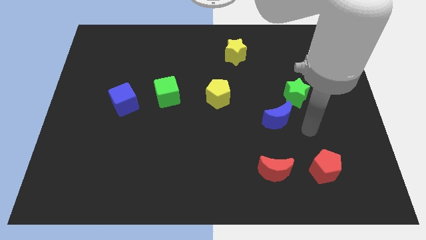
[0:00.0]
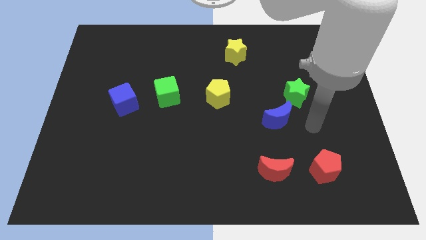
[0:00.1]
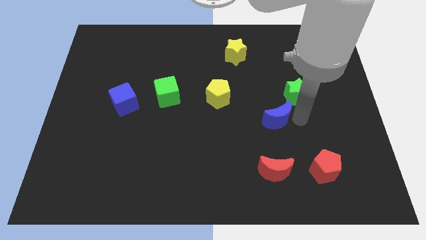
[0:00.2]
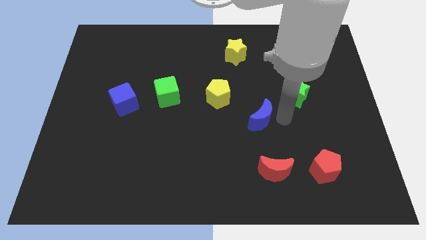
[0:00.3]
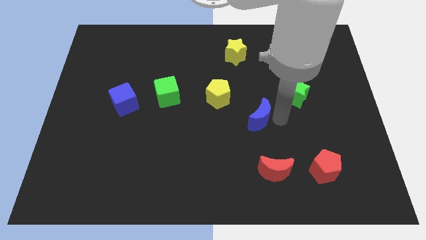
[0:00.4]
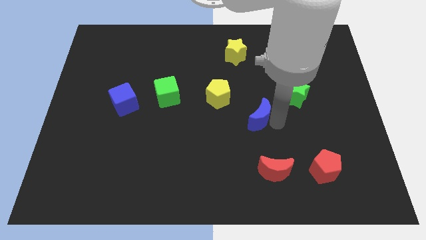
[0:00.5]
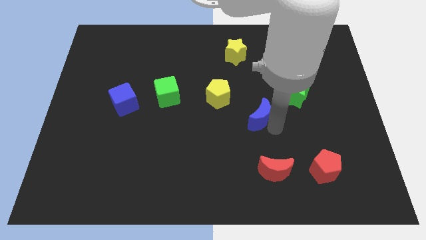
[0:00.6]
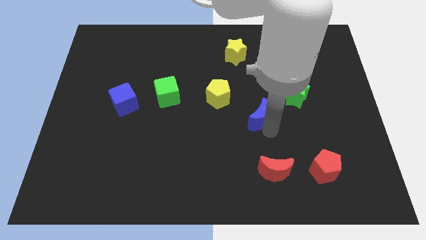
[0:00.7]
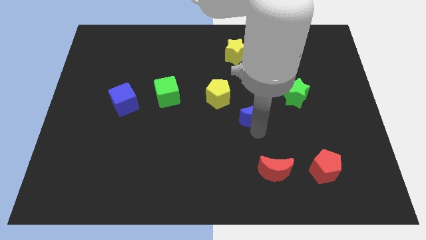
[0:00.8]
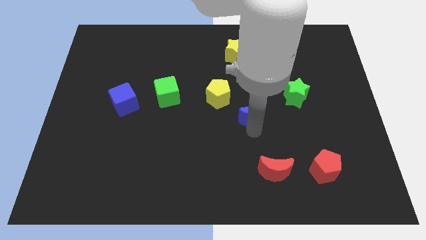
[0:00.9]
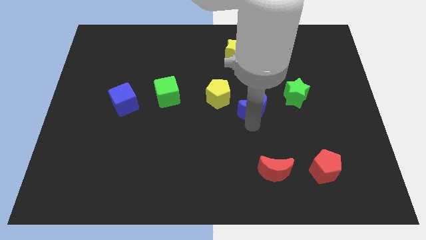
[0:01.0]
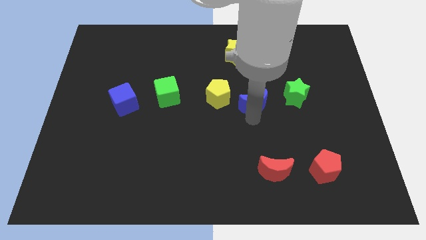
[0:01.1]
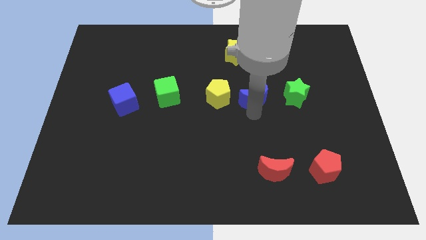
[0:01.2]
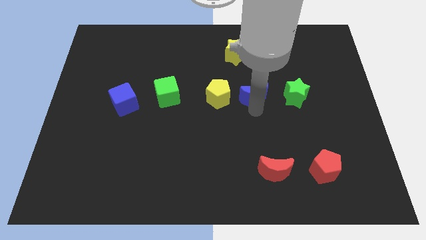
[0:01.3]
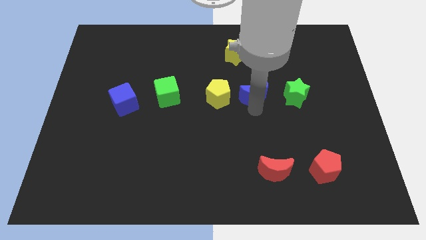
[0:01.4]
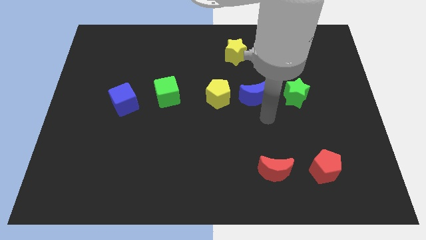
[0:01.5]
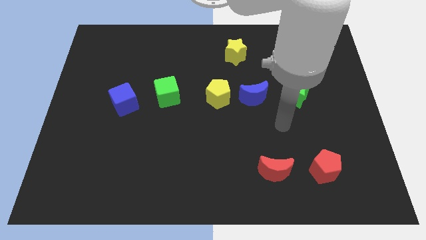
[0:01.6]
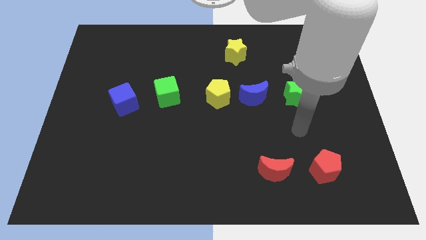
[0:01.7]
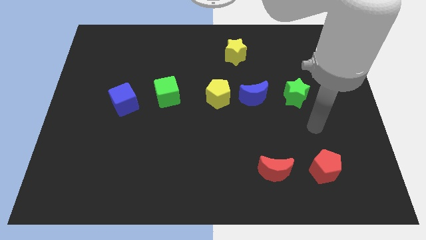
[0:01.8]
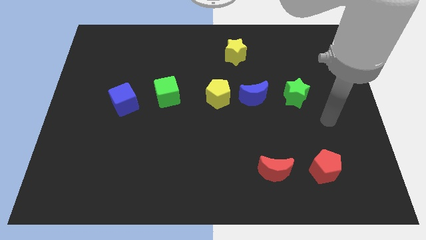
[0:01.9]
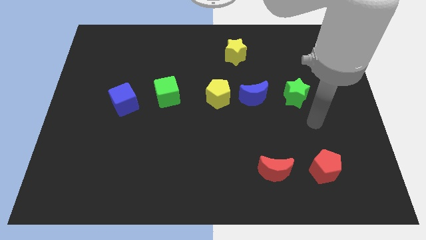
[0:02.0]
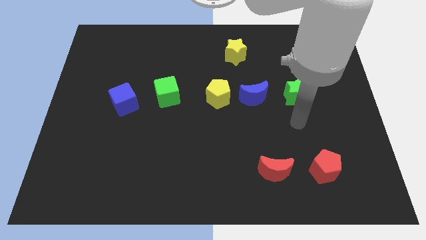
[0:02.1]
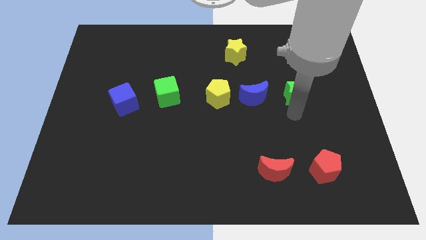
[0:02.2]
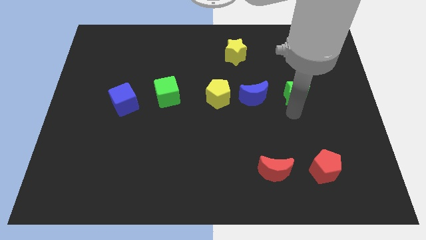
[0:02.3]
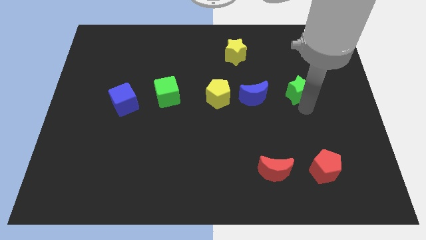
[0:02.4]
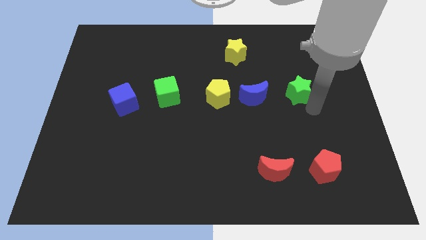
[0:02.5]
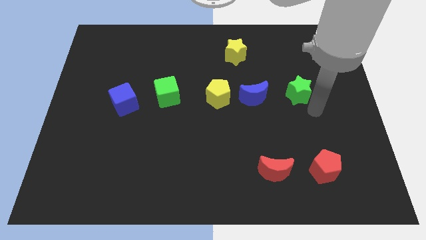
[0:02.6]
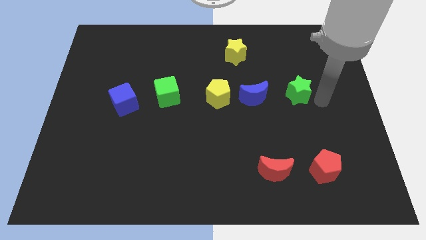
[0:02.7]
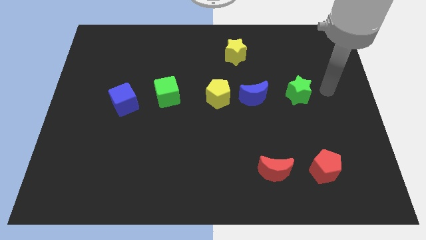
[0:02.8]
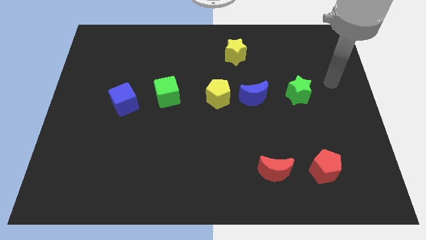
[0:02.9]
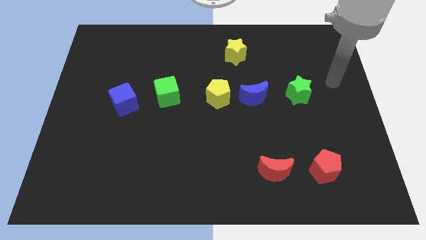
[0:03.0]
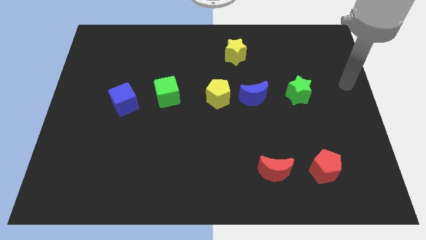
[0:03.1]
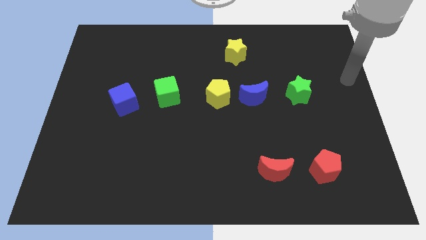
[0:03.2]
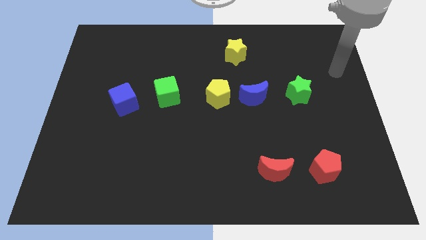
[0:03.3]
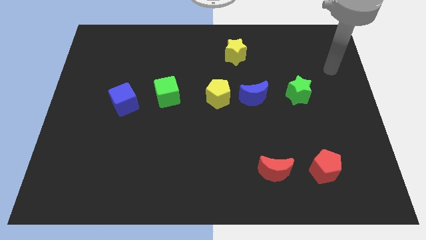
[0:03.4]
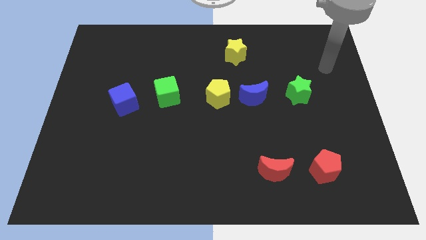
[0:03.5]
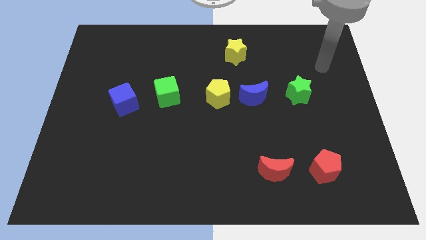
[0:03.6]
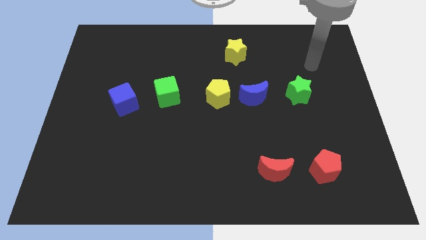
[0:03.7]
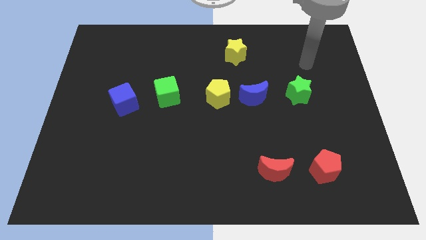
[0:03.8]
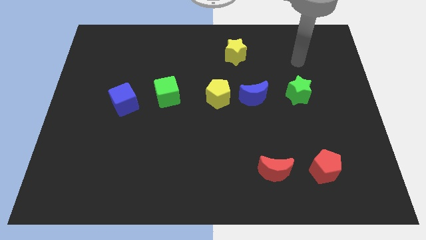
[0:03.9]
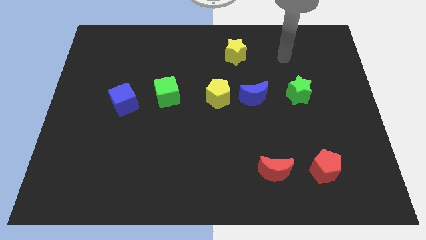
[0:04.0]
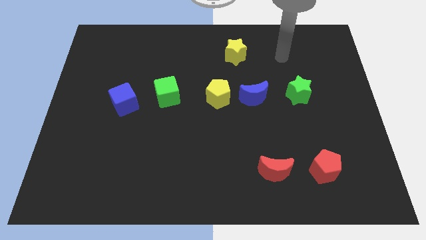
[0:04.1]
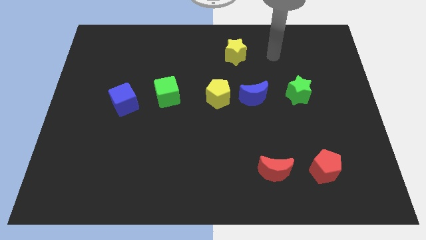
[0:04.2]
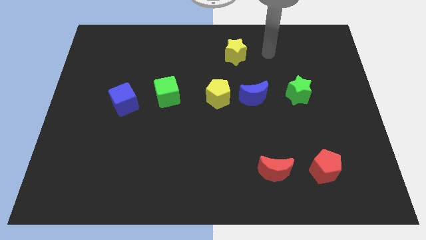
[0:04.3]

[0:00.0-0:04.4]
move the blue crescent and green star horizontally to the right side of the yellow pentagon

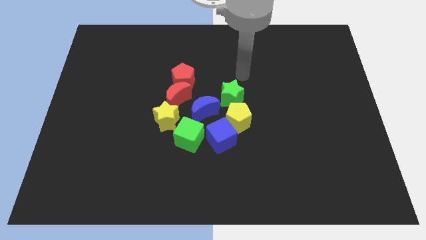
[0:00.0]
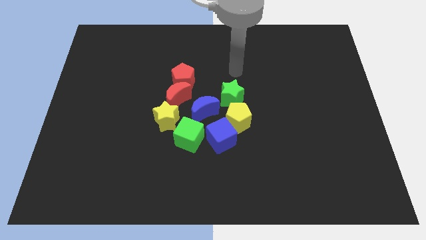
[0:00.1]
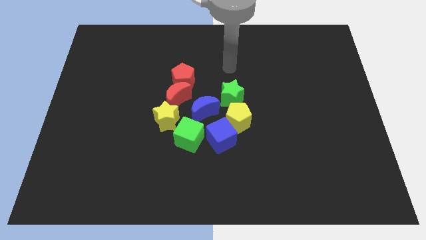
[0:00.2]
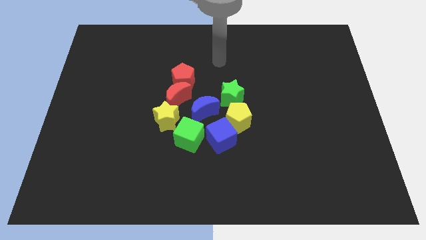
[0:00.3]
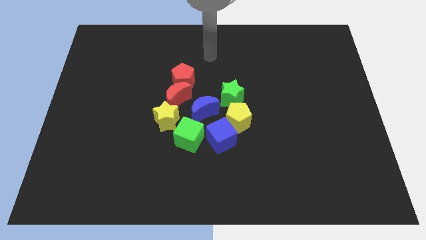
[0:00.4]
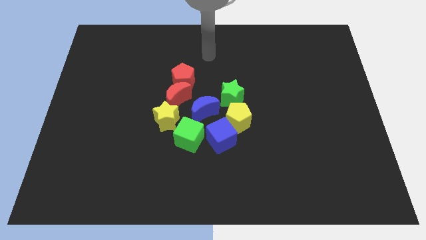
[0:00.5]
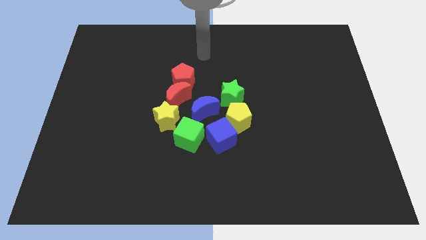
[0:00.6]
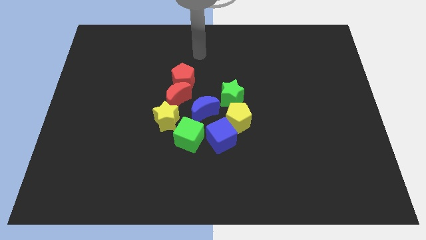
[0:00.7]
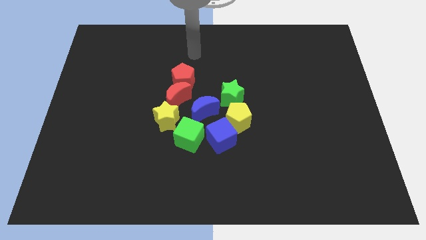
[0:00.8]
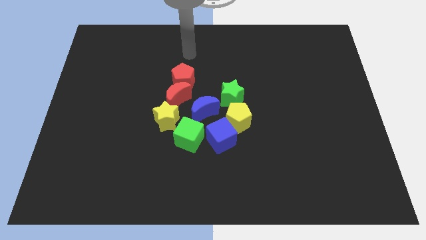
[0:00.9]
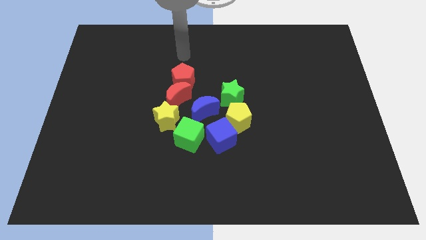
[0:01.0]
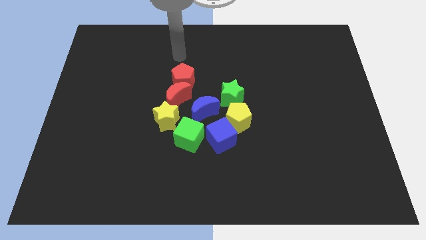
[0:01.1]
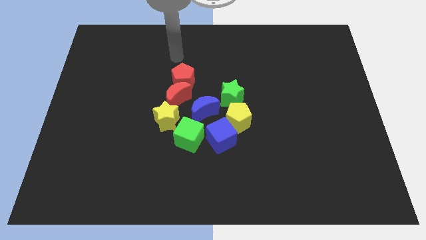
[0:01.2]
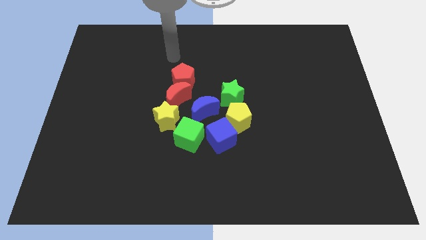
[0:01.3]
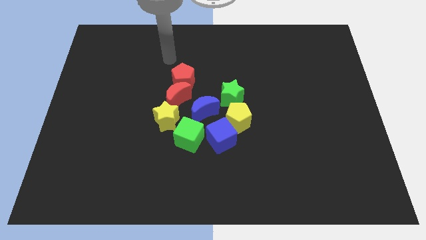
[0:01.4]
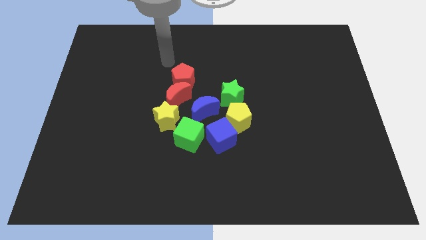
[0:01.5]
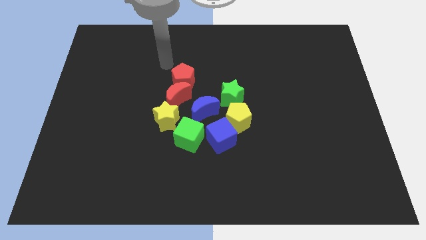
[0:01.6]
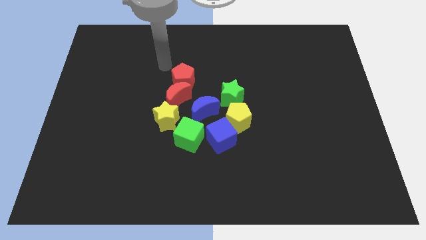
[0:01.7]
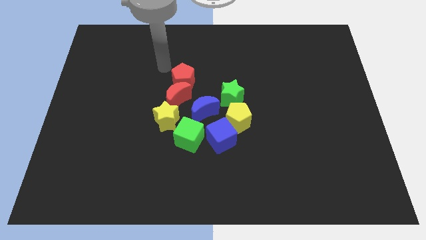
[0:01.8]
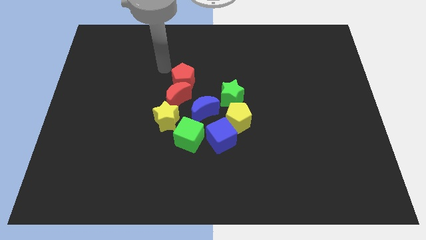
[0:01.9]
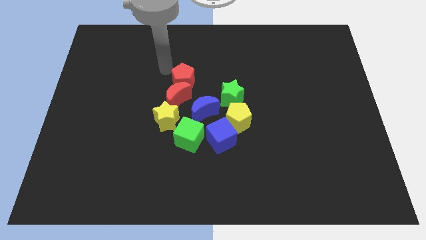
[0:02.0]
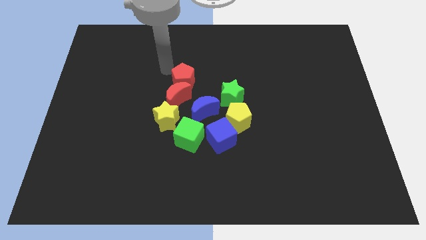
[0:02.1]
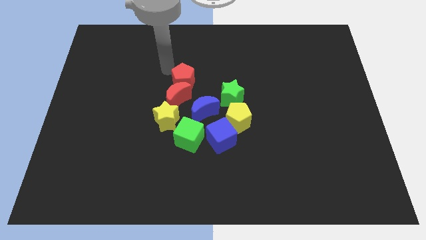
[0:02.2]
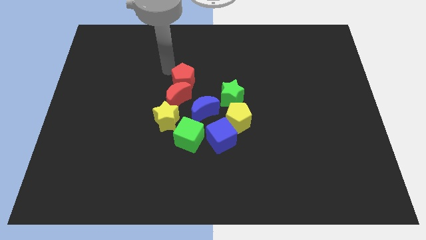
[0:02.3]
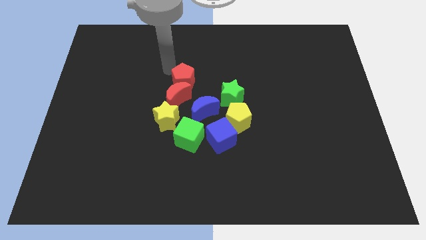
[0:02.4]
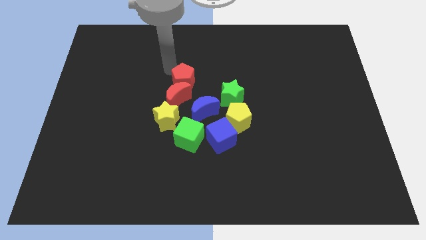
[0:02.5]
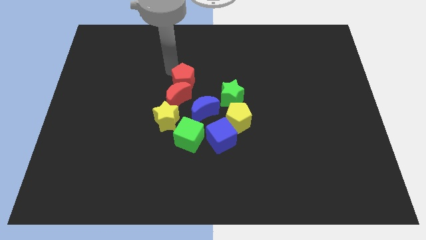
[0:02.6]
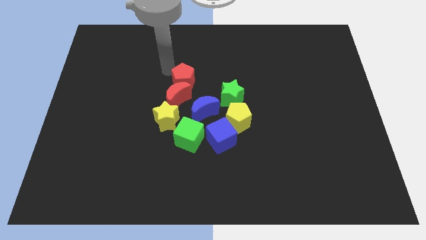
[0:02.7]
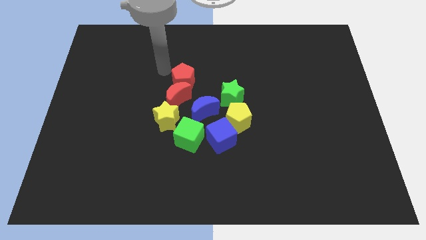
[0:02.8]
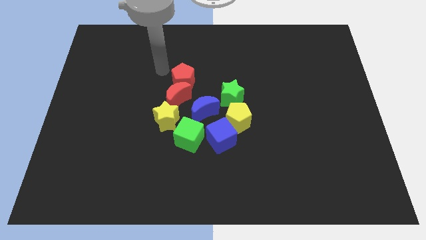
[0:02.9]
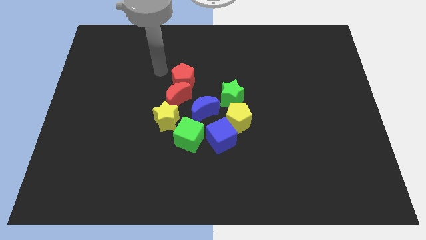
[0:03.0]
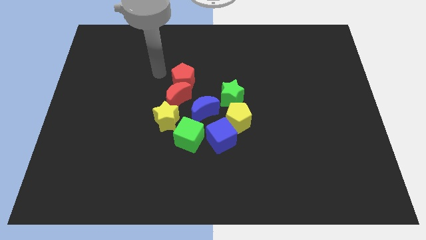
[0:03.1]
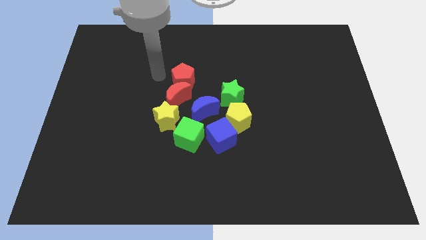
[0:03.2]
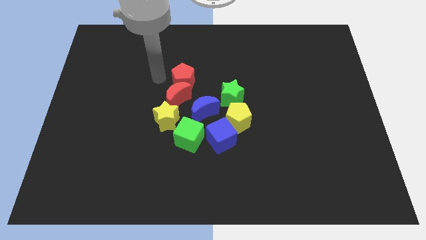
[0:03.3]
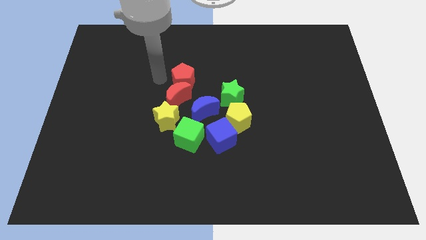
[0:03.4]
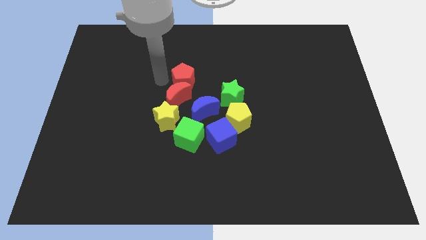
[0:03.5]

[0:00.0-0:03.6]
move your arm to the left of red pentagon

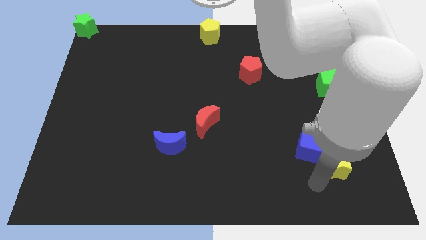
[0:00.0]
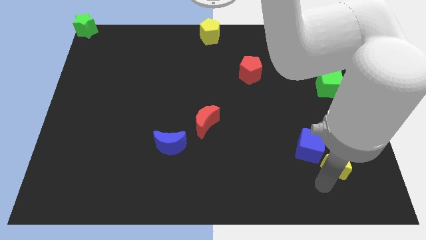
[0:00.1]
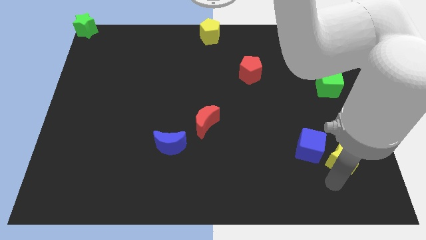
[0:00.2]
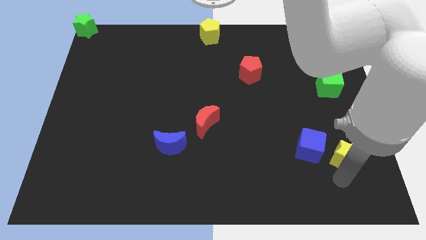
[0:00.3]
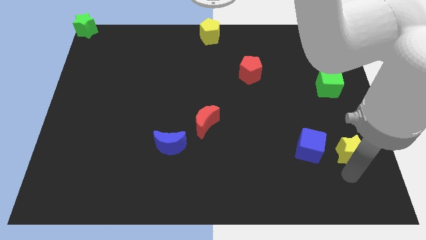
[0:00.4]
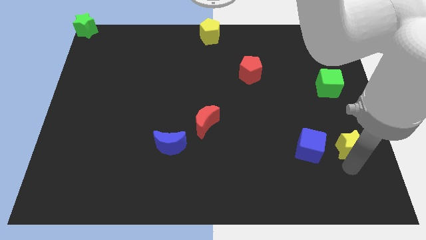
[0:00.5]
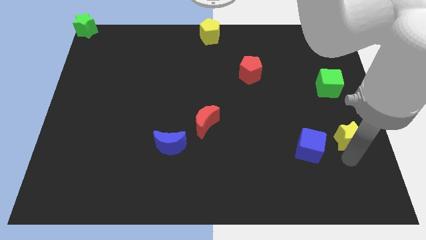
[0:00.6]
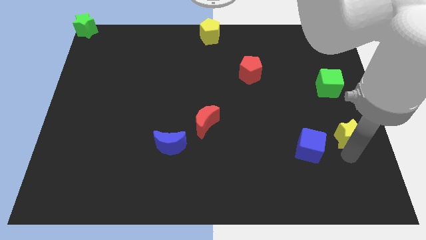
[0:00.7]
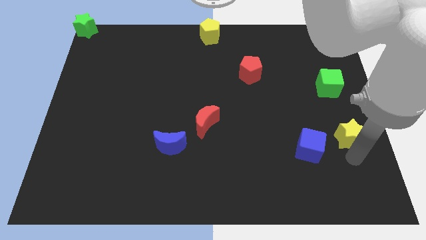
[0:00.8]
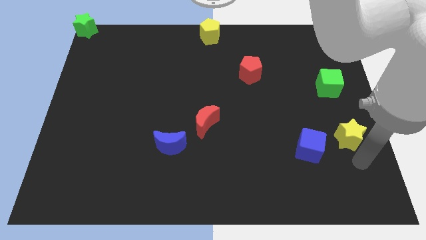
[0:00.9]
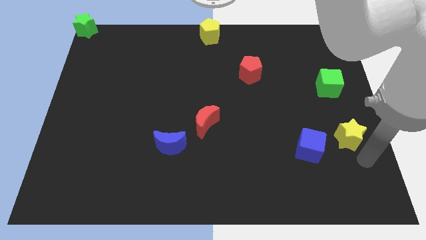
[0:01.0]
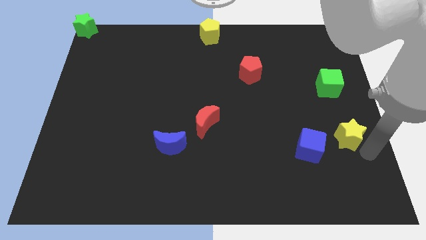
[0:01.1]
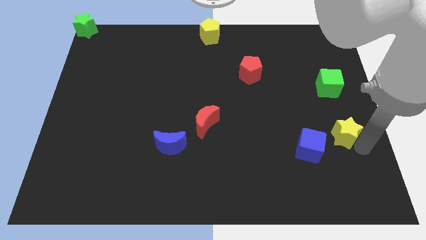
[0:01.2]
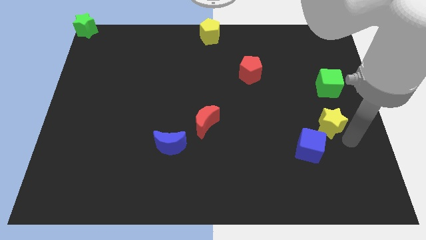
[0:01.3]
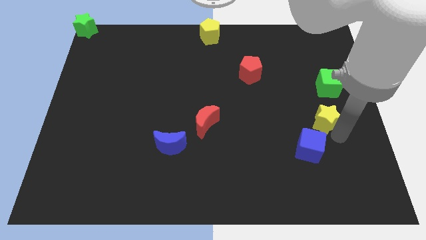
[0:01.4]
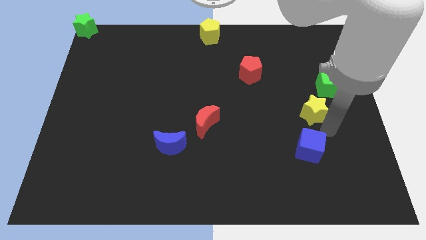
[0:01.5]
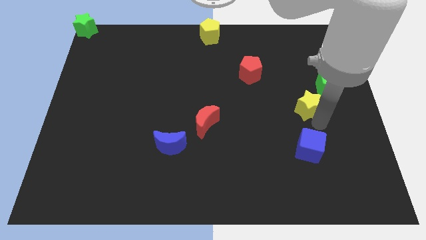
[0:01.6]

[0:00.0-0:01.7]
place yellow star in between blue cube and green cube
